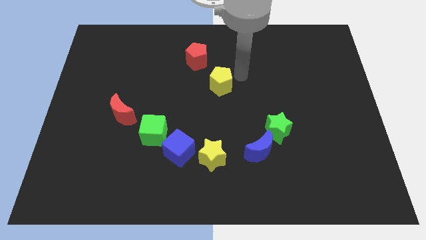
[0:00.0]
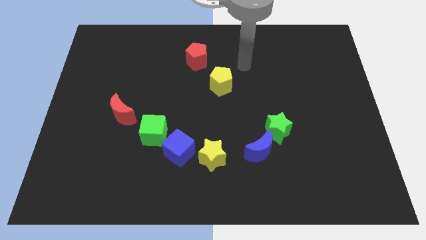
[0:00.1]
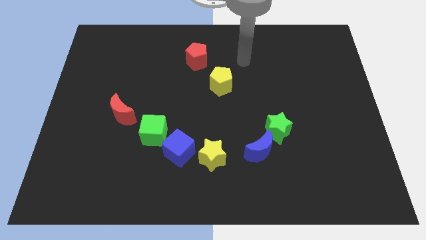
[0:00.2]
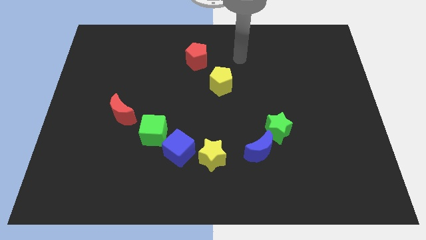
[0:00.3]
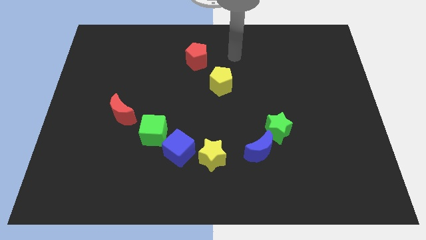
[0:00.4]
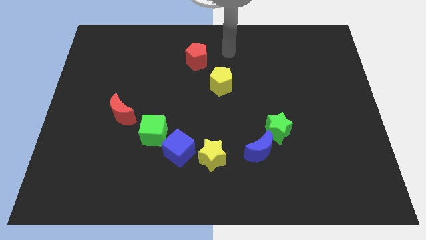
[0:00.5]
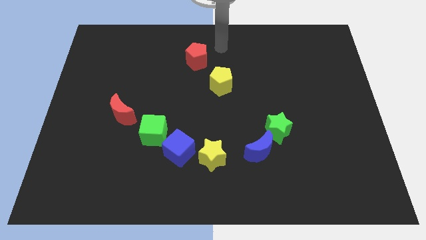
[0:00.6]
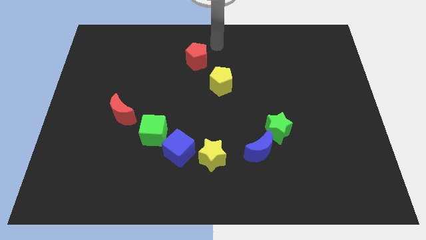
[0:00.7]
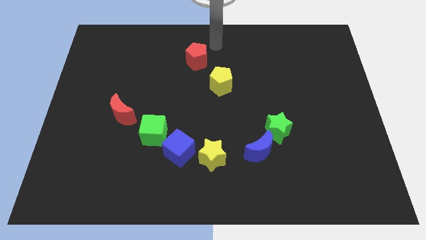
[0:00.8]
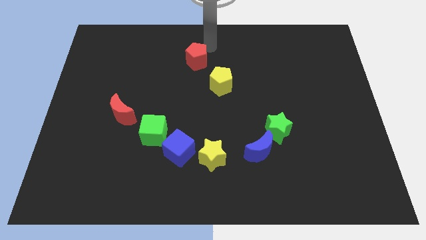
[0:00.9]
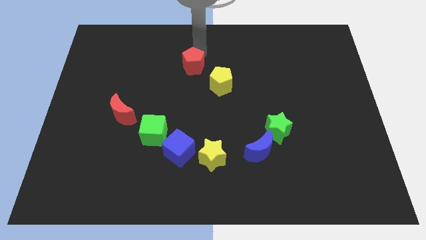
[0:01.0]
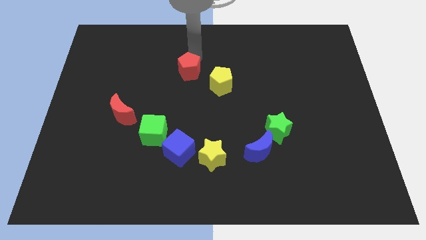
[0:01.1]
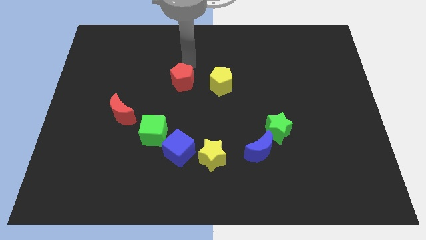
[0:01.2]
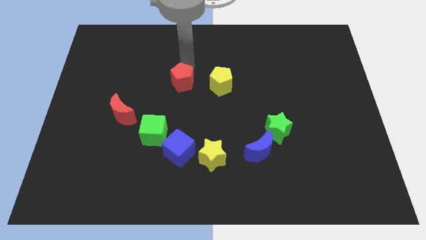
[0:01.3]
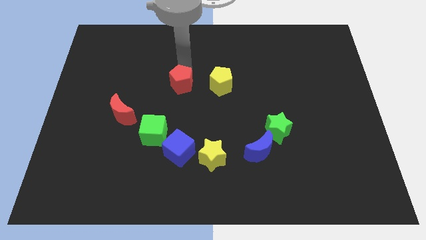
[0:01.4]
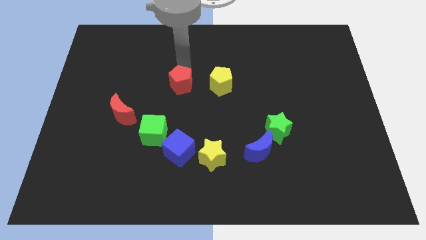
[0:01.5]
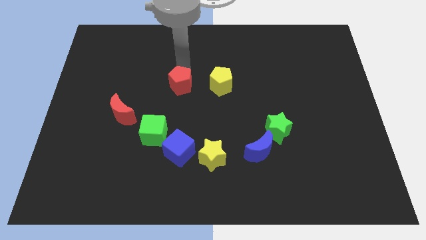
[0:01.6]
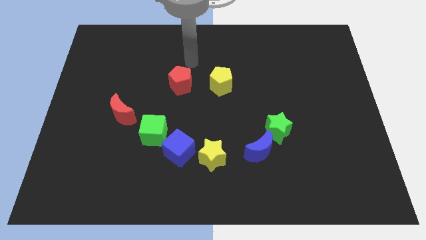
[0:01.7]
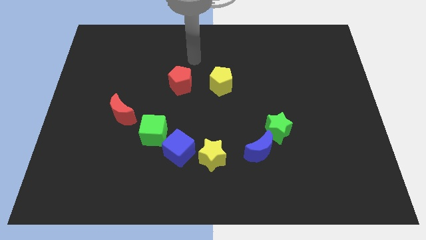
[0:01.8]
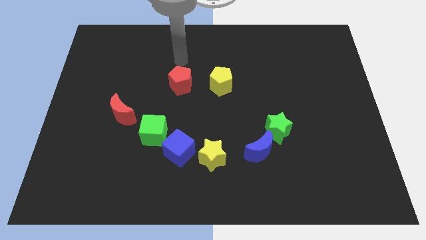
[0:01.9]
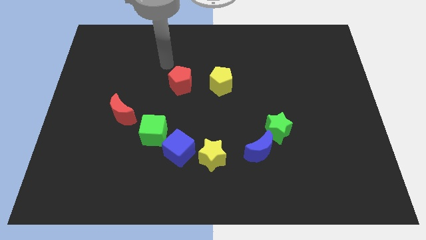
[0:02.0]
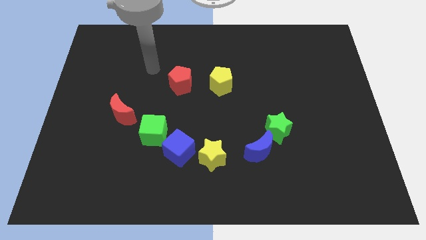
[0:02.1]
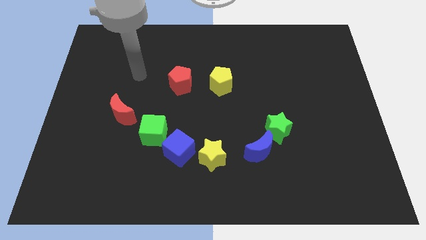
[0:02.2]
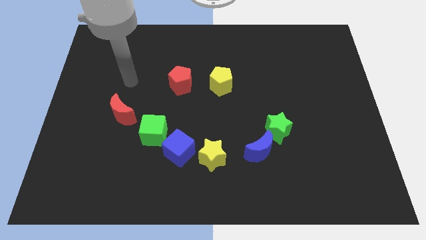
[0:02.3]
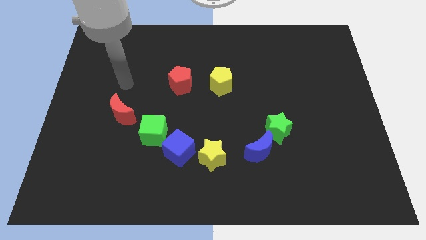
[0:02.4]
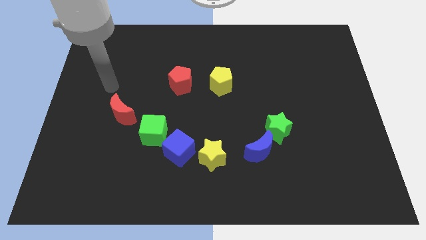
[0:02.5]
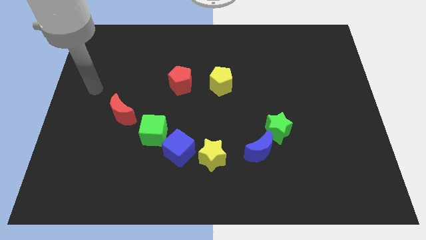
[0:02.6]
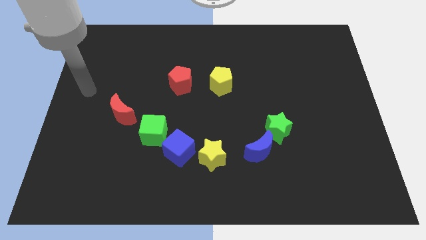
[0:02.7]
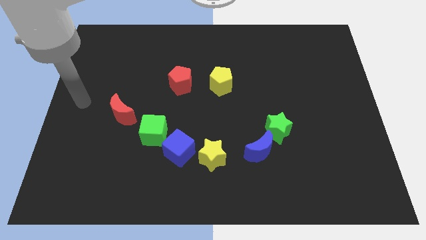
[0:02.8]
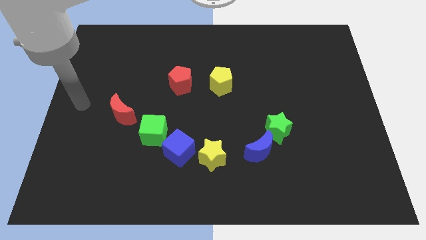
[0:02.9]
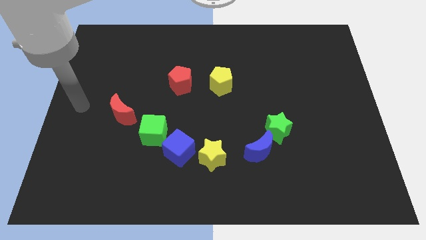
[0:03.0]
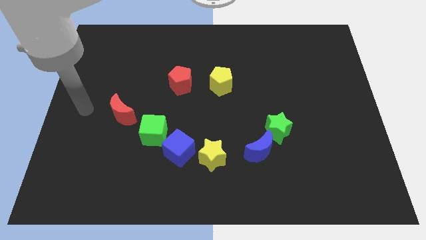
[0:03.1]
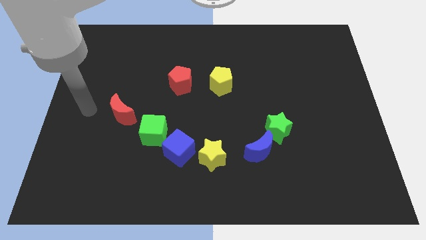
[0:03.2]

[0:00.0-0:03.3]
place the red pentagon horizontally to the left side of the yellow pentagon

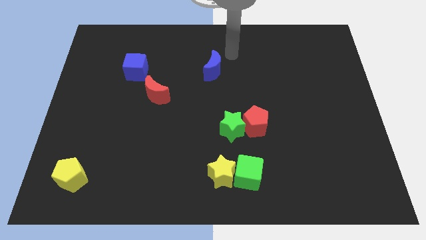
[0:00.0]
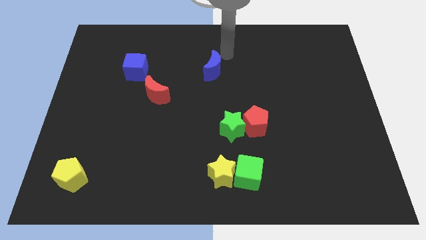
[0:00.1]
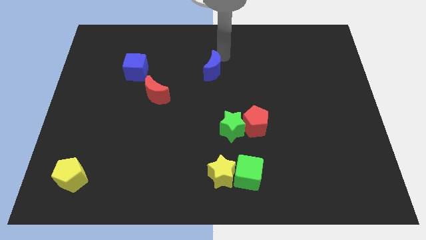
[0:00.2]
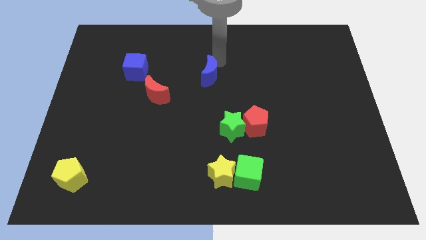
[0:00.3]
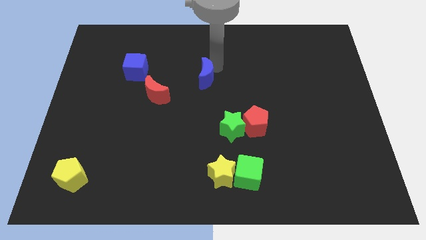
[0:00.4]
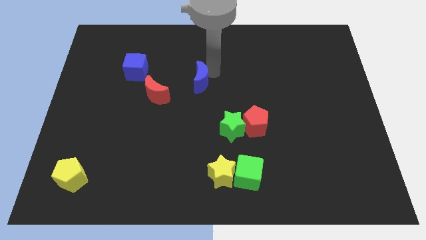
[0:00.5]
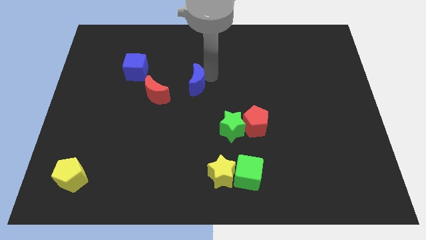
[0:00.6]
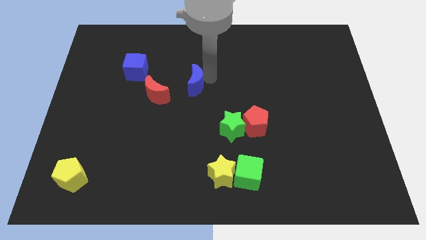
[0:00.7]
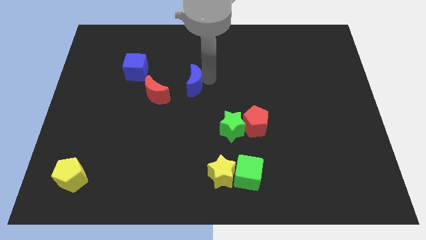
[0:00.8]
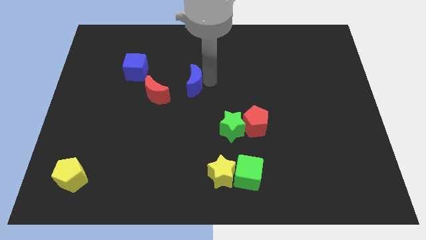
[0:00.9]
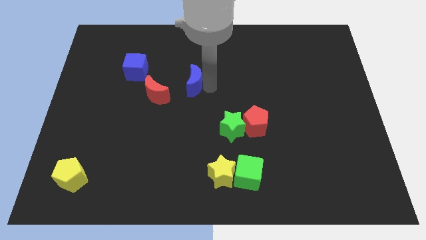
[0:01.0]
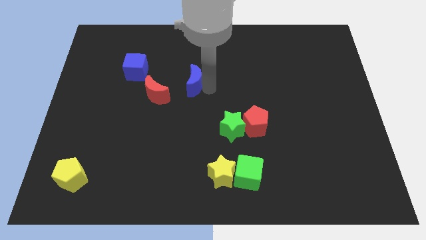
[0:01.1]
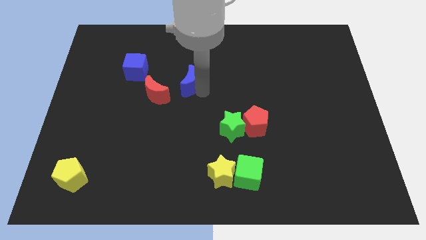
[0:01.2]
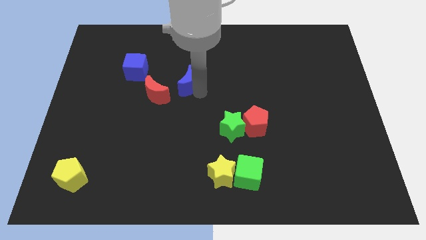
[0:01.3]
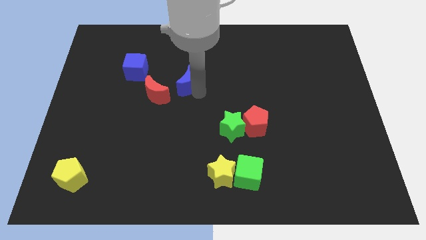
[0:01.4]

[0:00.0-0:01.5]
drag the blue moon towards the red moon

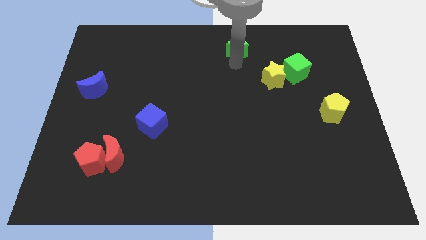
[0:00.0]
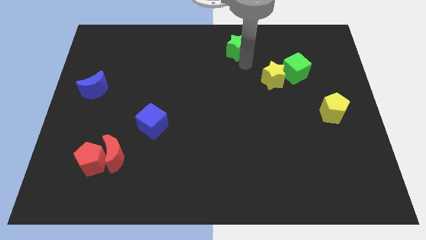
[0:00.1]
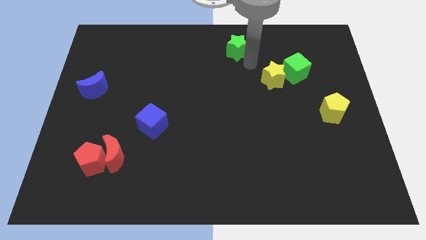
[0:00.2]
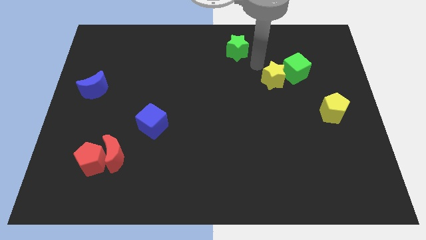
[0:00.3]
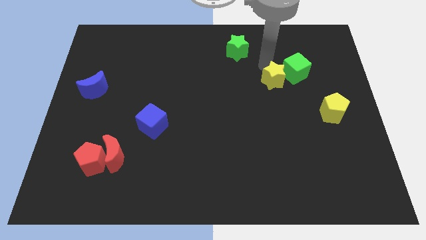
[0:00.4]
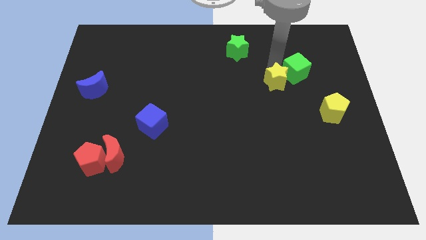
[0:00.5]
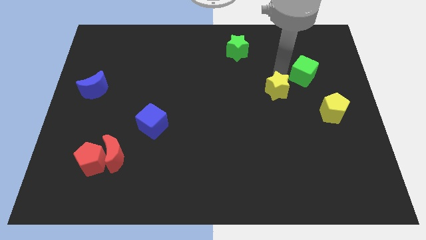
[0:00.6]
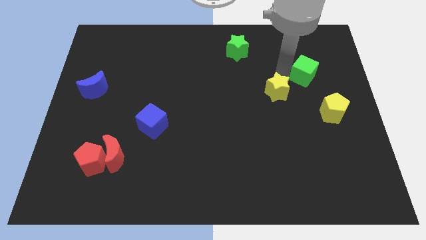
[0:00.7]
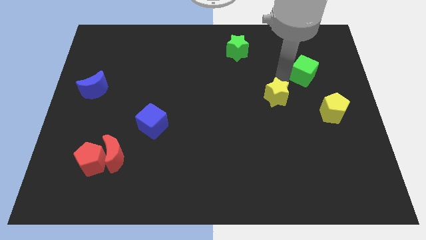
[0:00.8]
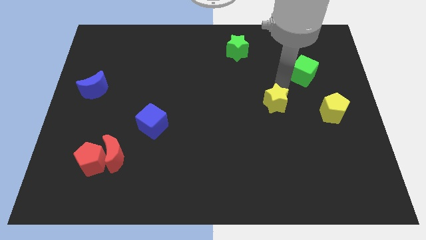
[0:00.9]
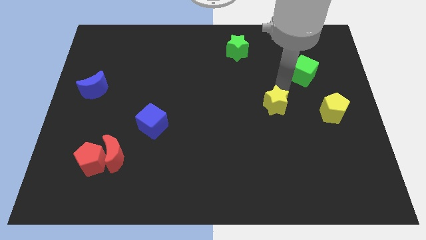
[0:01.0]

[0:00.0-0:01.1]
move yellow star slightly down

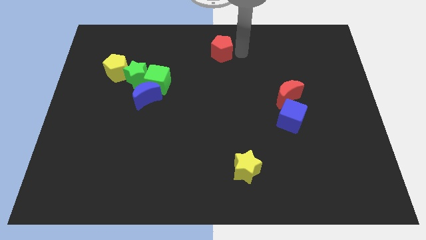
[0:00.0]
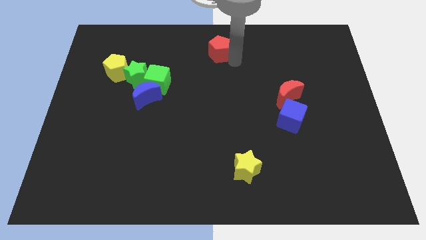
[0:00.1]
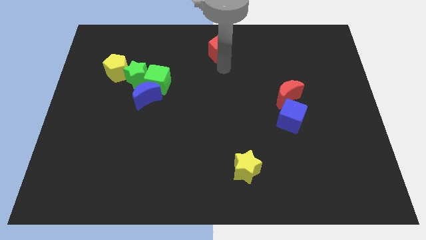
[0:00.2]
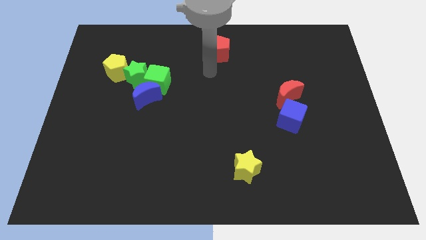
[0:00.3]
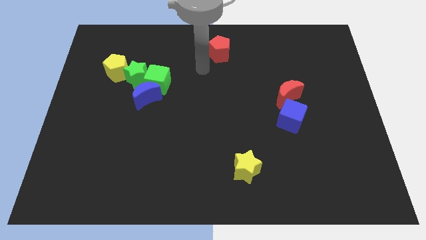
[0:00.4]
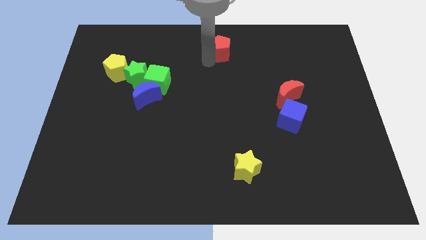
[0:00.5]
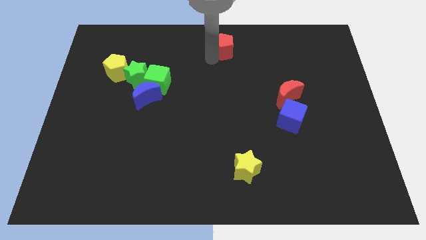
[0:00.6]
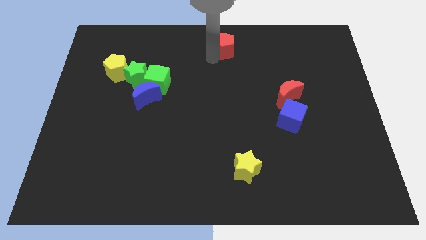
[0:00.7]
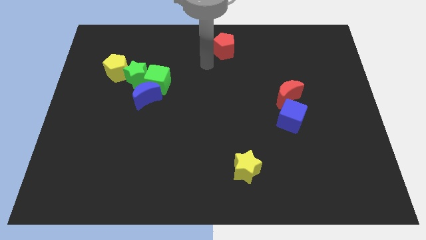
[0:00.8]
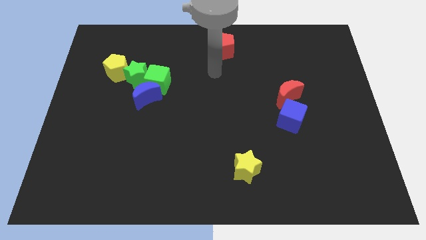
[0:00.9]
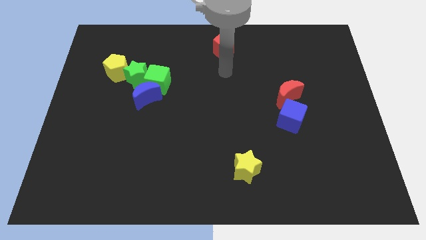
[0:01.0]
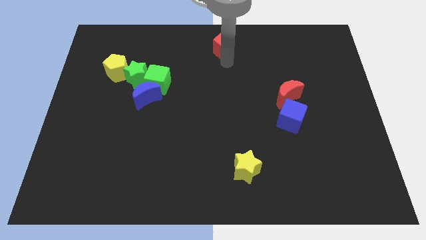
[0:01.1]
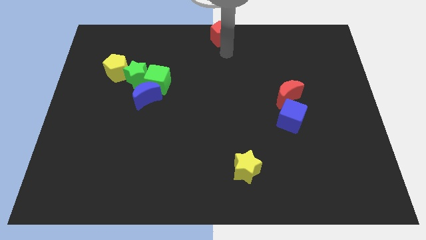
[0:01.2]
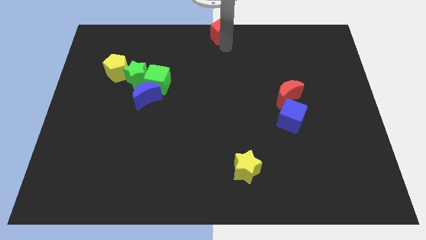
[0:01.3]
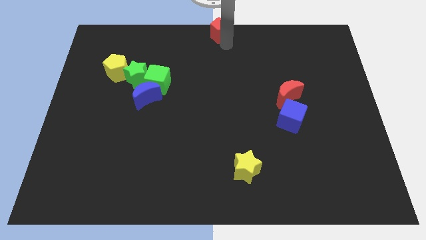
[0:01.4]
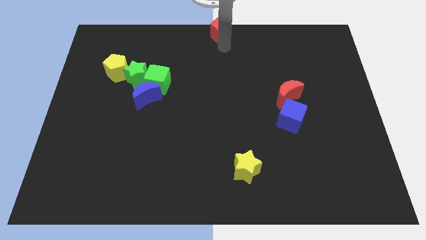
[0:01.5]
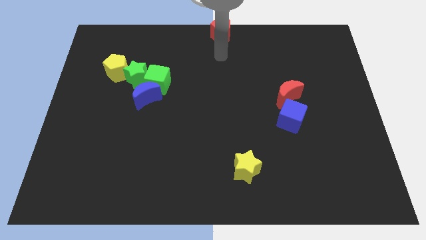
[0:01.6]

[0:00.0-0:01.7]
place the red pentagon at the top center of the board

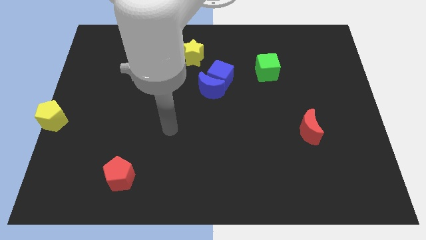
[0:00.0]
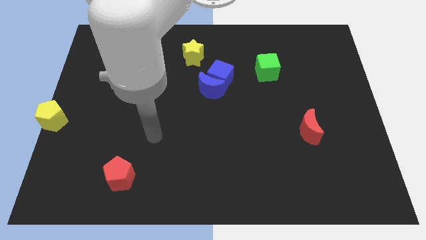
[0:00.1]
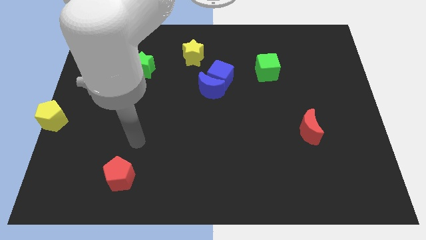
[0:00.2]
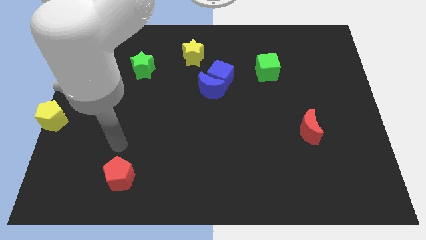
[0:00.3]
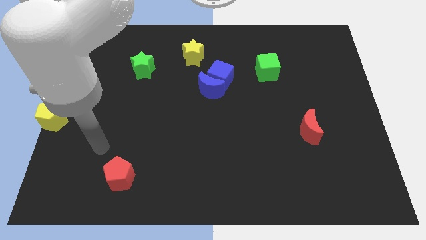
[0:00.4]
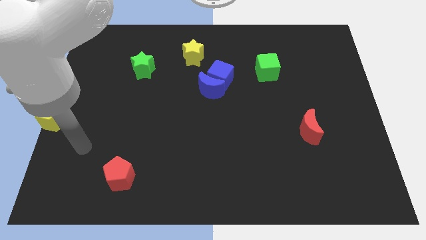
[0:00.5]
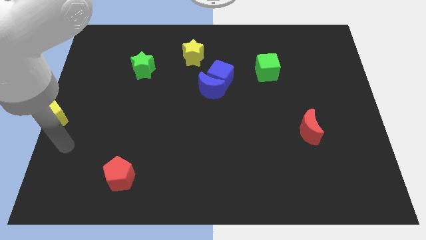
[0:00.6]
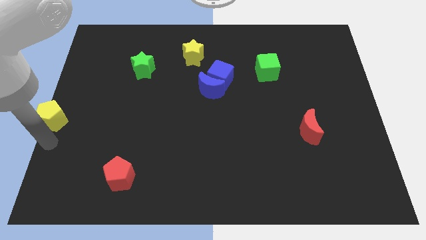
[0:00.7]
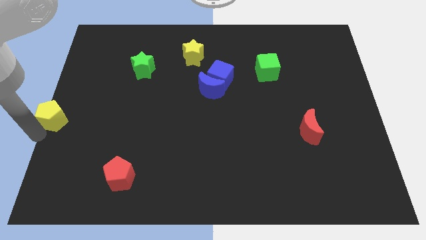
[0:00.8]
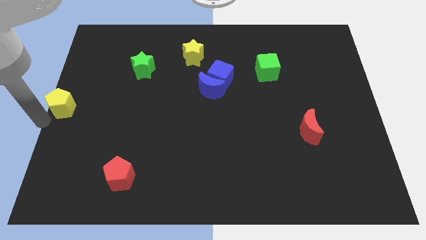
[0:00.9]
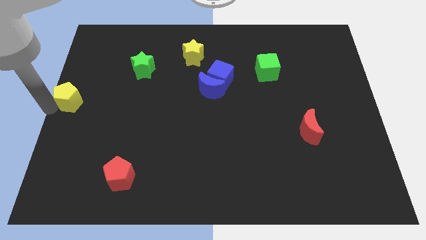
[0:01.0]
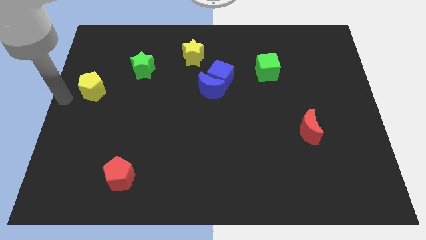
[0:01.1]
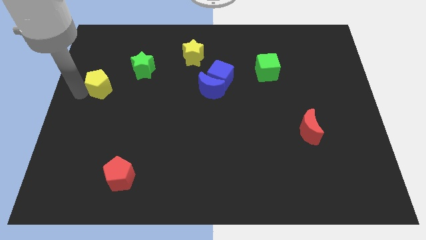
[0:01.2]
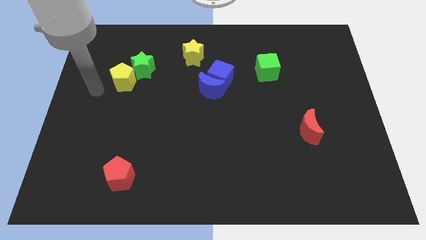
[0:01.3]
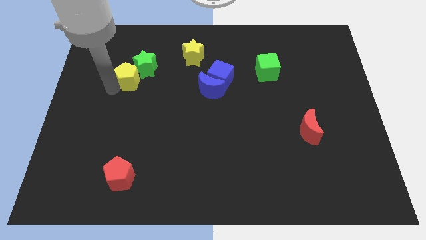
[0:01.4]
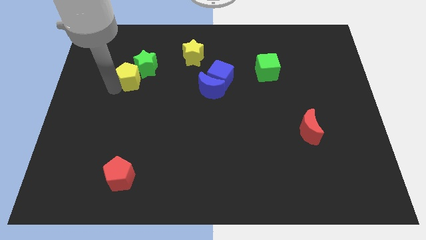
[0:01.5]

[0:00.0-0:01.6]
push the yellow pentagon into the green star
